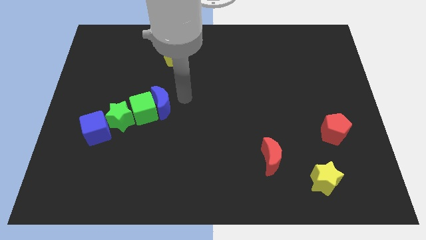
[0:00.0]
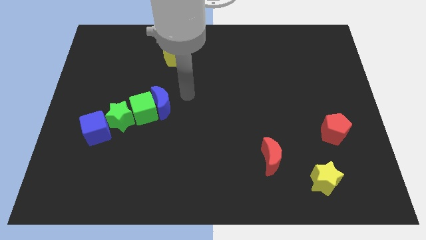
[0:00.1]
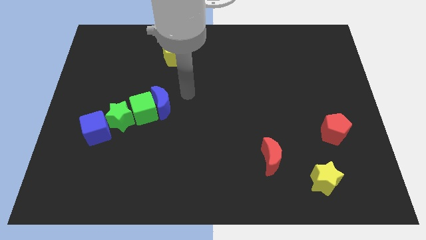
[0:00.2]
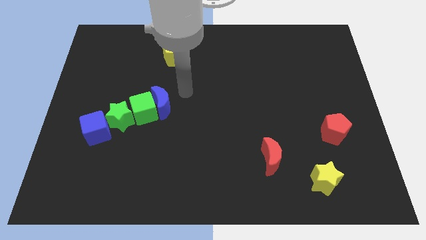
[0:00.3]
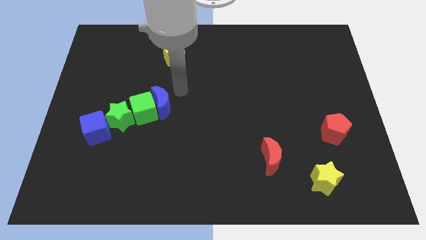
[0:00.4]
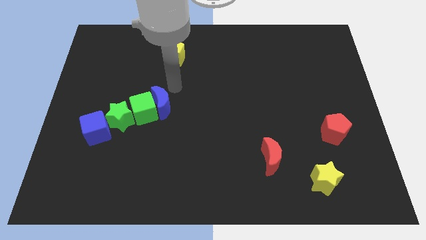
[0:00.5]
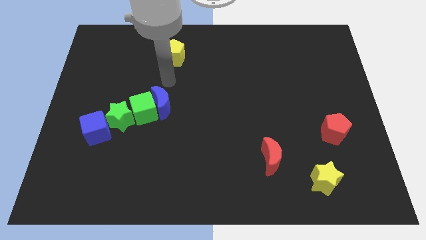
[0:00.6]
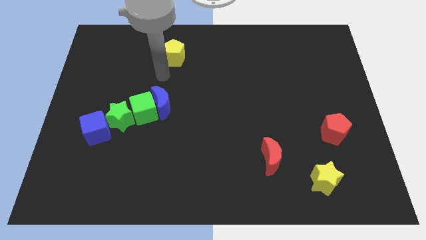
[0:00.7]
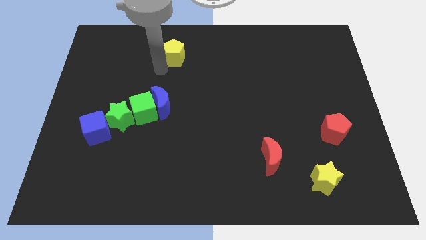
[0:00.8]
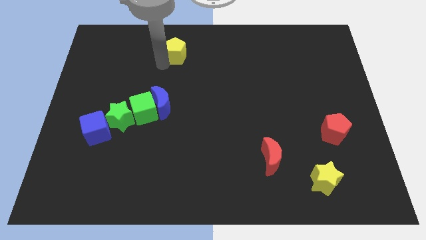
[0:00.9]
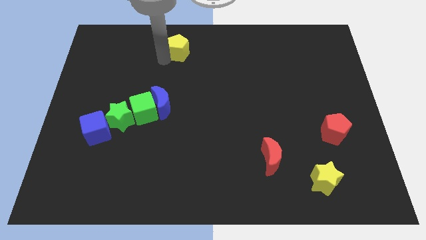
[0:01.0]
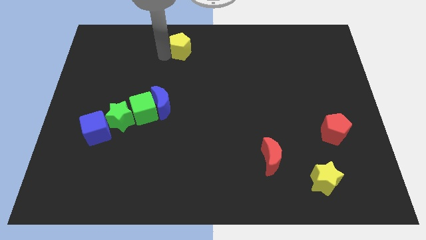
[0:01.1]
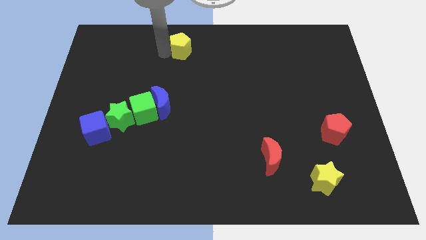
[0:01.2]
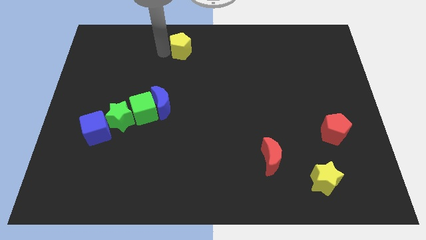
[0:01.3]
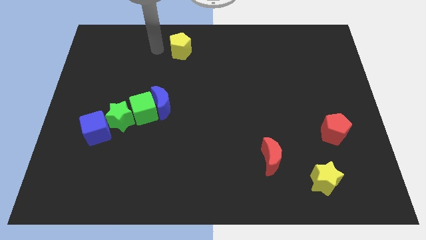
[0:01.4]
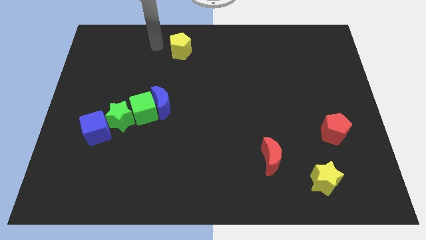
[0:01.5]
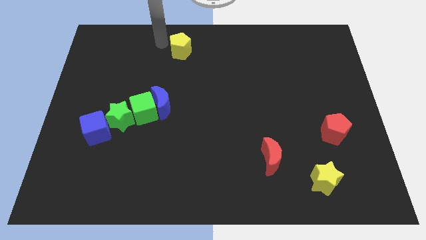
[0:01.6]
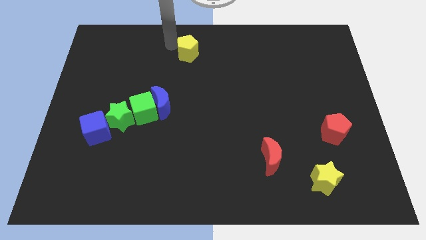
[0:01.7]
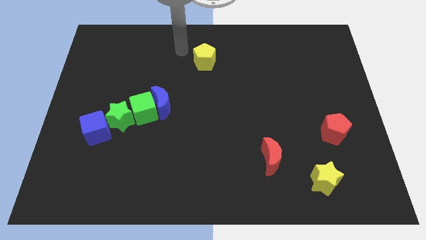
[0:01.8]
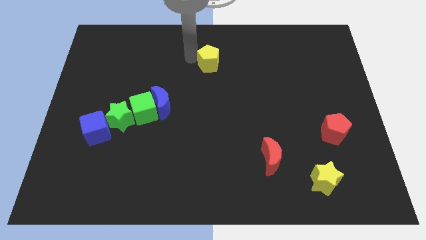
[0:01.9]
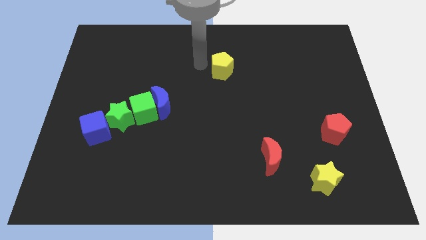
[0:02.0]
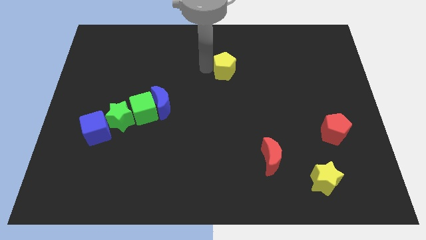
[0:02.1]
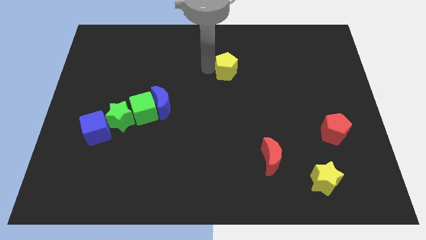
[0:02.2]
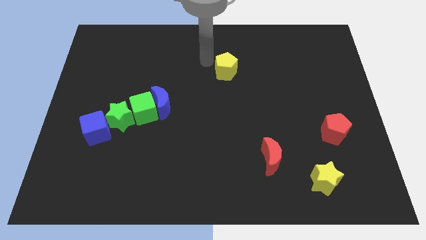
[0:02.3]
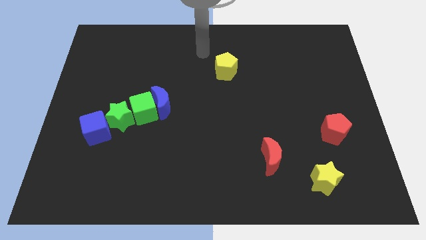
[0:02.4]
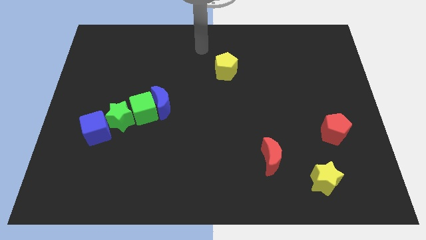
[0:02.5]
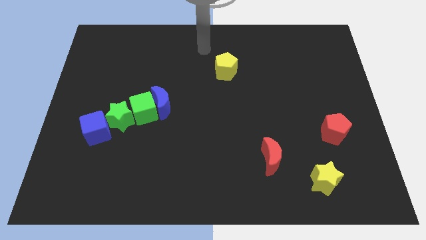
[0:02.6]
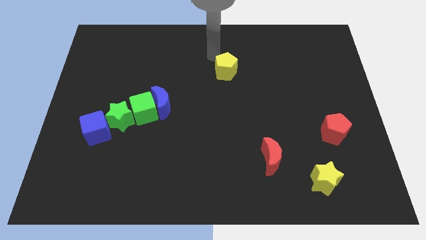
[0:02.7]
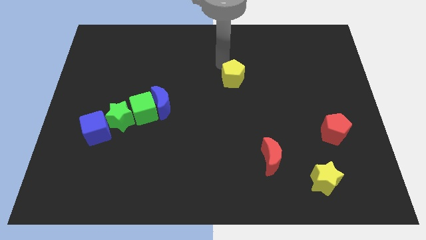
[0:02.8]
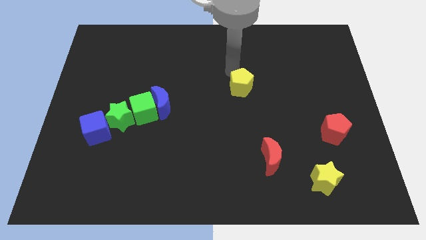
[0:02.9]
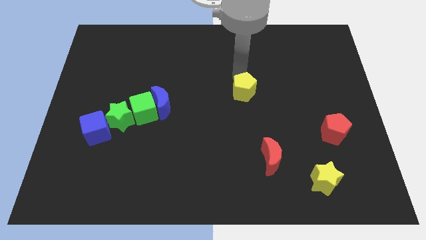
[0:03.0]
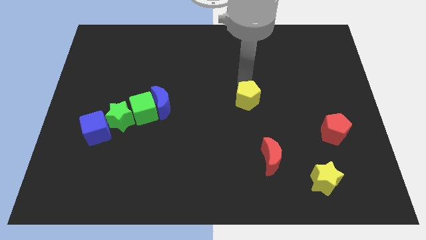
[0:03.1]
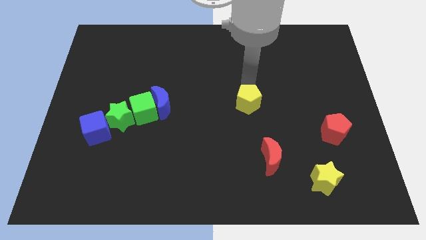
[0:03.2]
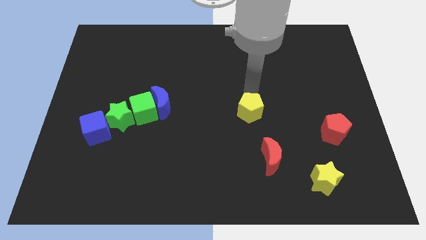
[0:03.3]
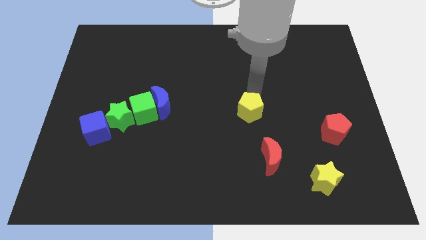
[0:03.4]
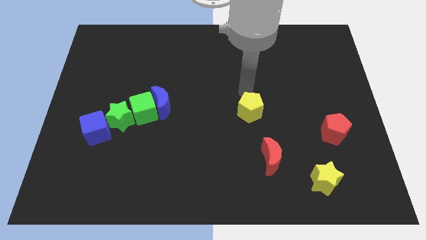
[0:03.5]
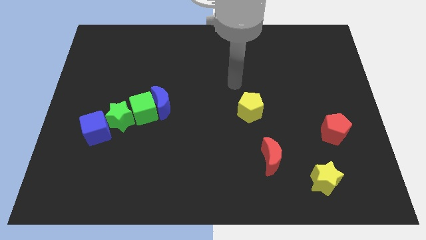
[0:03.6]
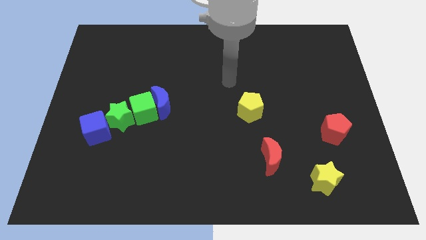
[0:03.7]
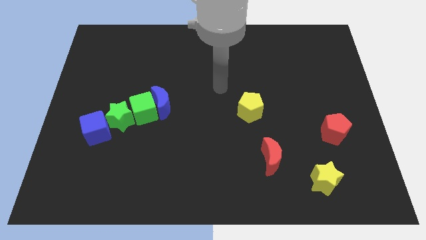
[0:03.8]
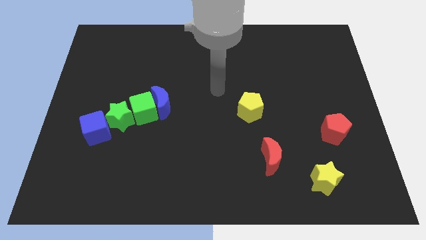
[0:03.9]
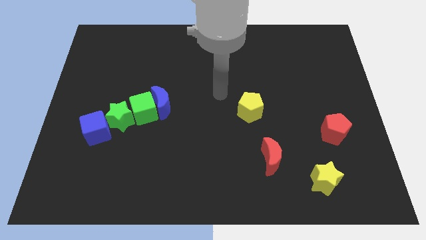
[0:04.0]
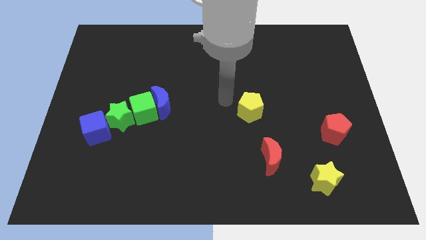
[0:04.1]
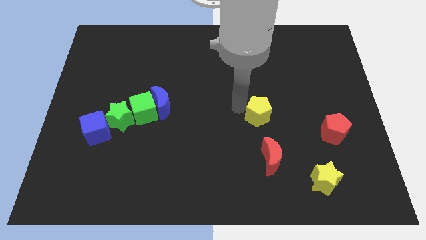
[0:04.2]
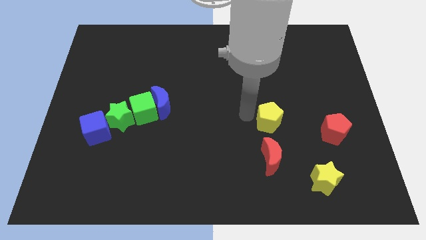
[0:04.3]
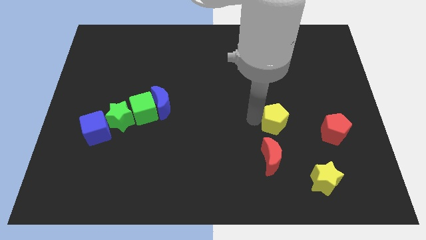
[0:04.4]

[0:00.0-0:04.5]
push the yellow pentagon towards the red crescent

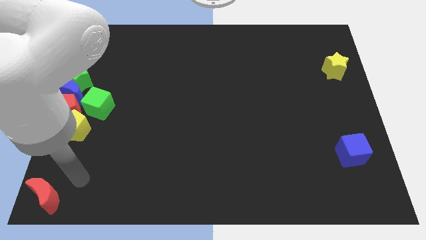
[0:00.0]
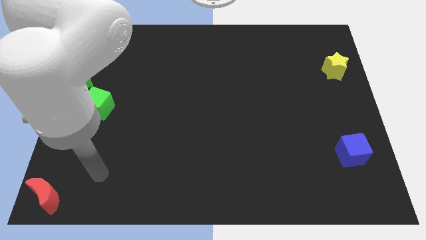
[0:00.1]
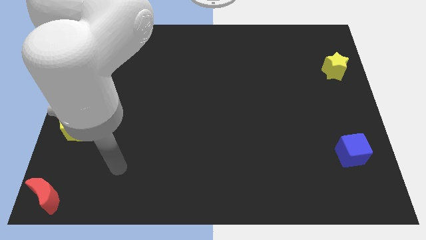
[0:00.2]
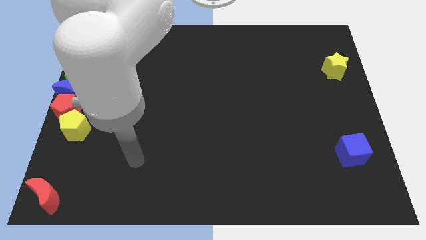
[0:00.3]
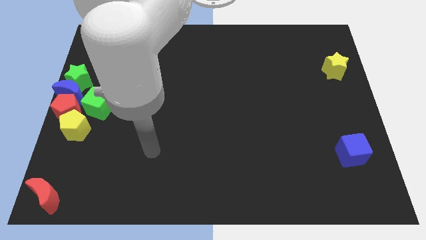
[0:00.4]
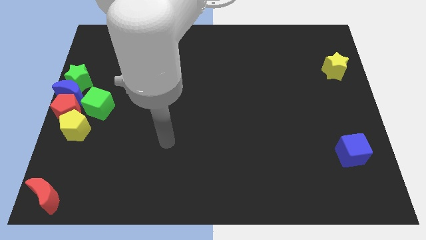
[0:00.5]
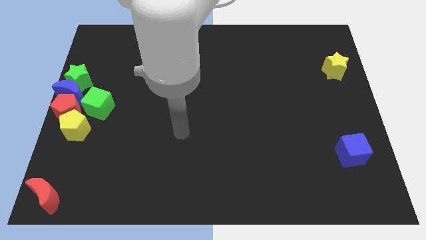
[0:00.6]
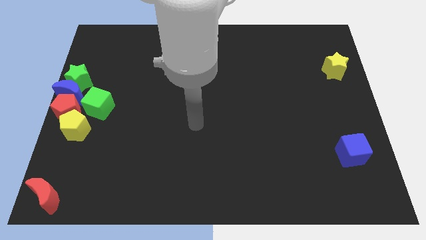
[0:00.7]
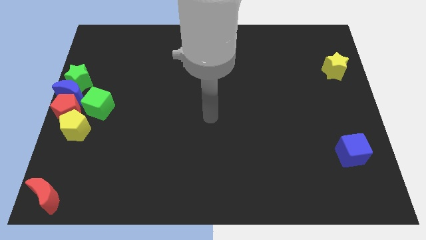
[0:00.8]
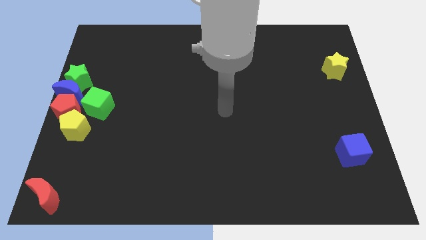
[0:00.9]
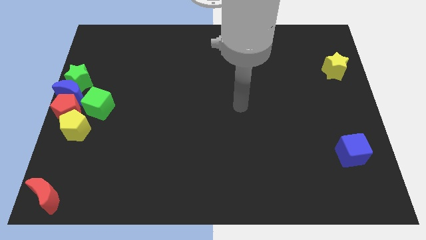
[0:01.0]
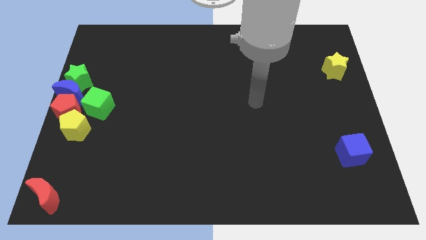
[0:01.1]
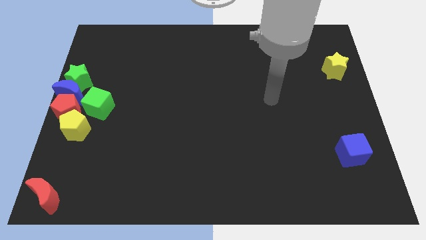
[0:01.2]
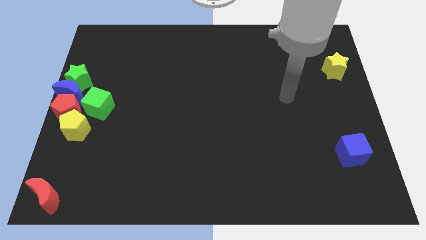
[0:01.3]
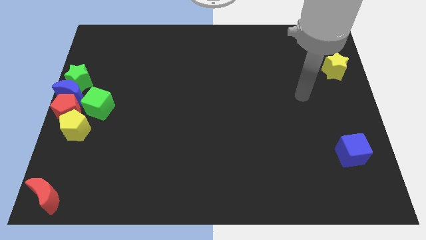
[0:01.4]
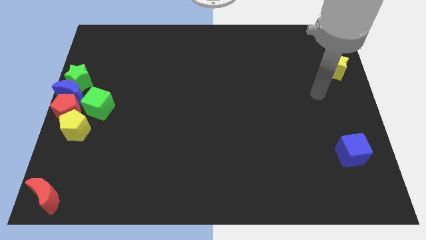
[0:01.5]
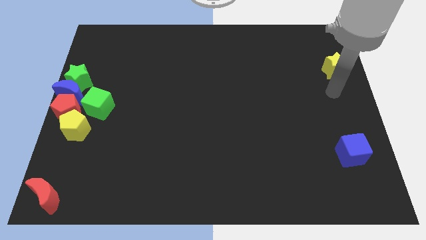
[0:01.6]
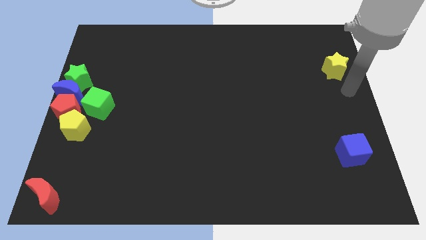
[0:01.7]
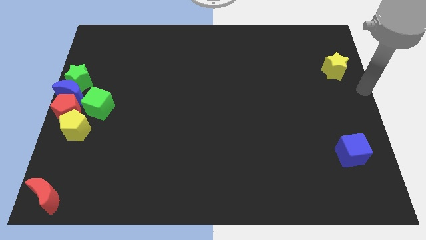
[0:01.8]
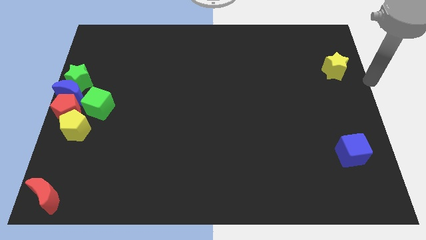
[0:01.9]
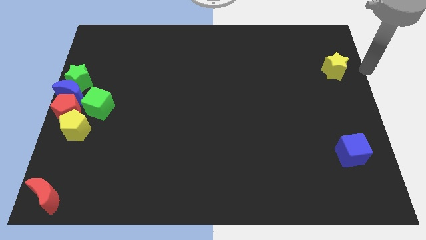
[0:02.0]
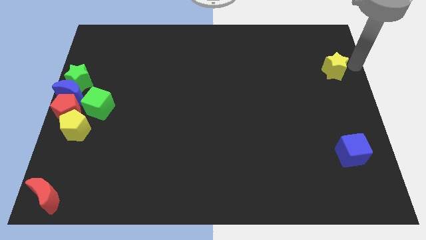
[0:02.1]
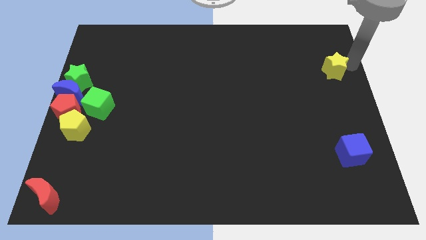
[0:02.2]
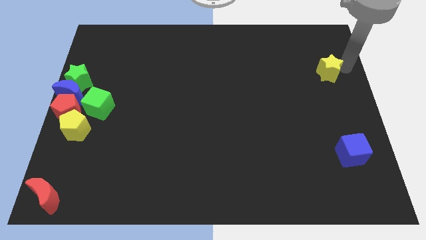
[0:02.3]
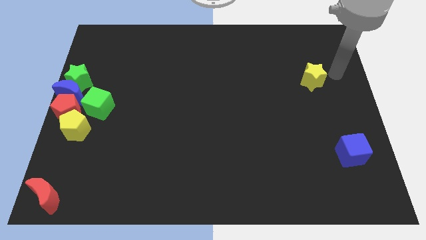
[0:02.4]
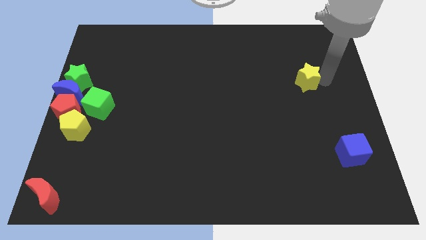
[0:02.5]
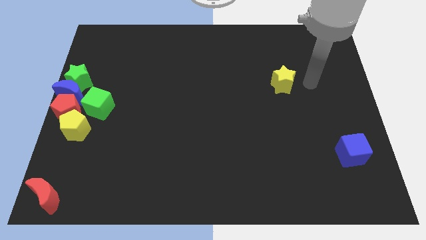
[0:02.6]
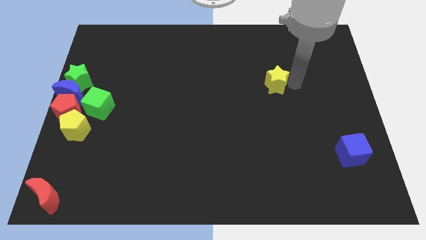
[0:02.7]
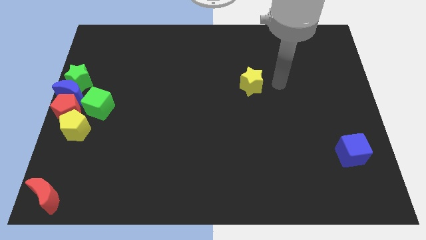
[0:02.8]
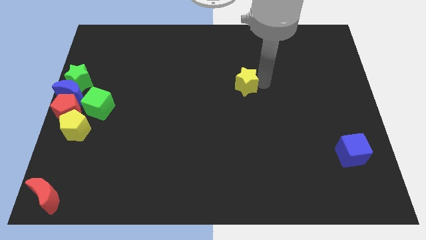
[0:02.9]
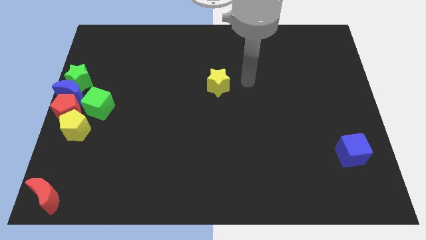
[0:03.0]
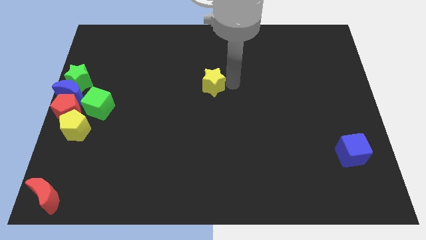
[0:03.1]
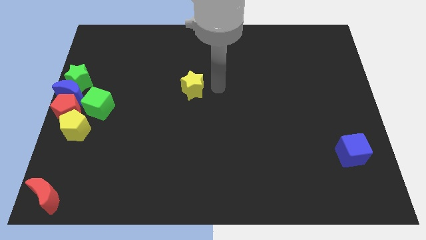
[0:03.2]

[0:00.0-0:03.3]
move the yellow star to the top center towards left side

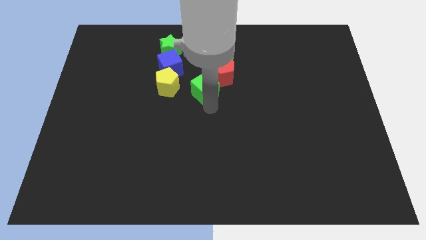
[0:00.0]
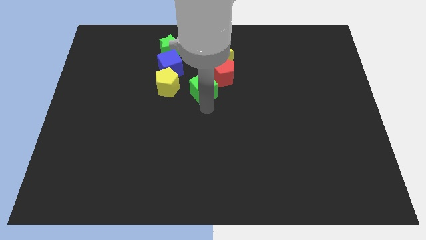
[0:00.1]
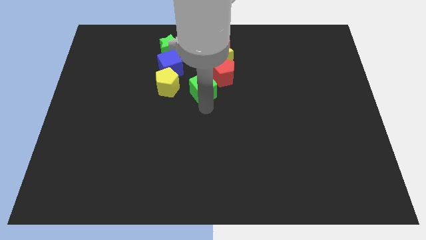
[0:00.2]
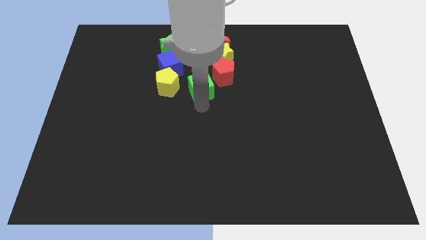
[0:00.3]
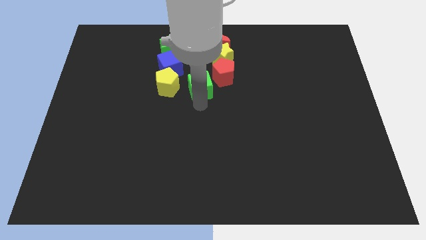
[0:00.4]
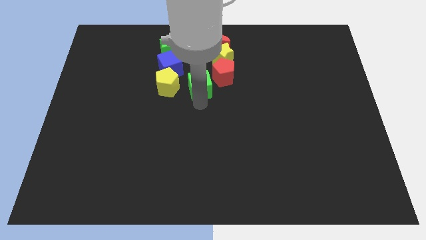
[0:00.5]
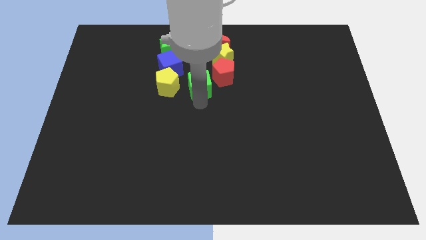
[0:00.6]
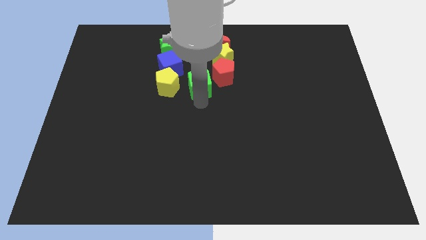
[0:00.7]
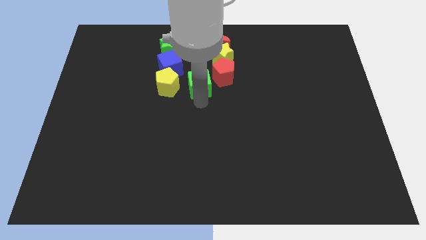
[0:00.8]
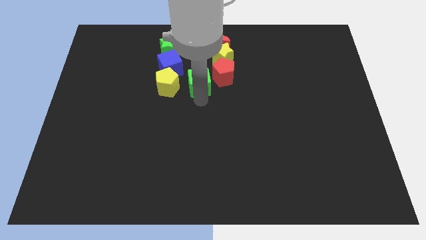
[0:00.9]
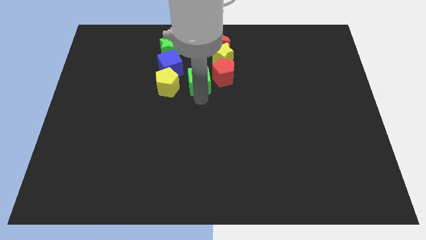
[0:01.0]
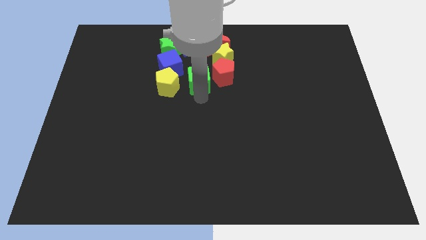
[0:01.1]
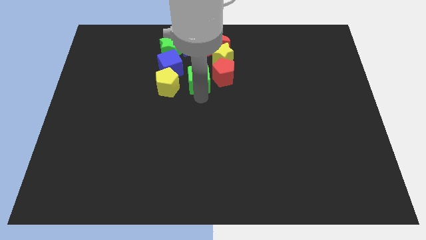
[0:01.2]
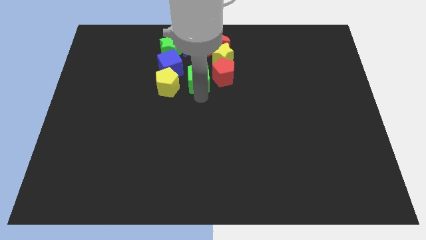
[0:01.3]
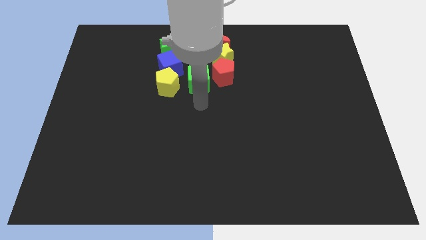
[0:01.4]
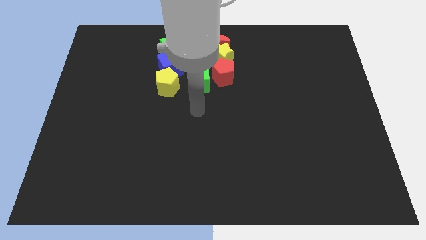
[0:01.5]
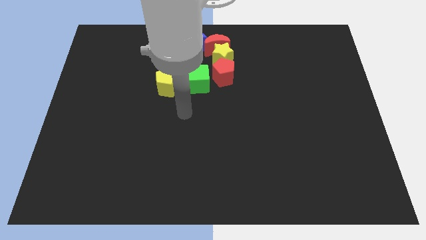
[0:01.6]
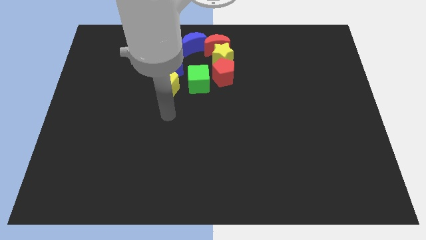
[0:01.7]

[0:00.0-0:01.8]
place the green cube in between the yellow pentagon and the red pentagon
